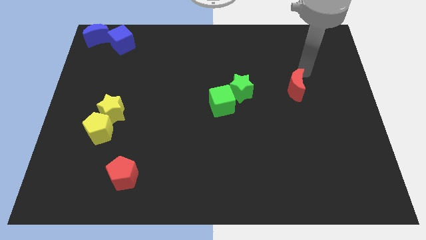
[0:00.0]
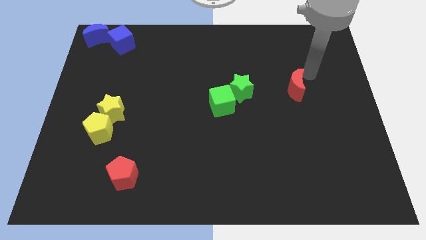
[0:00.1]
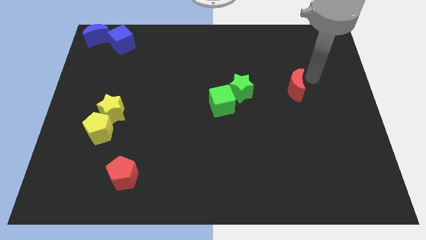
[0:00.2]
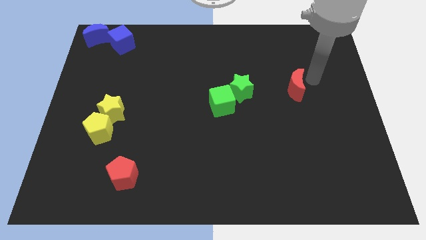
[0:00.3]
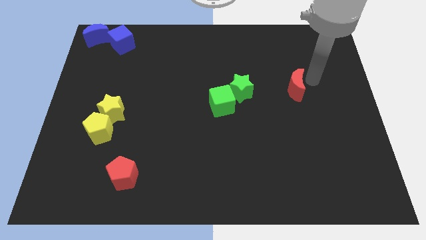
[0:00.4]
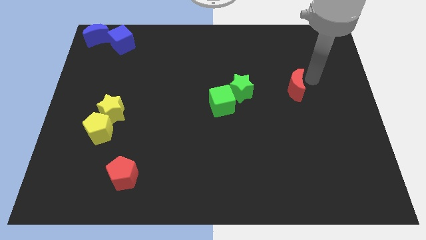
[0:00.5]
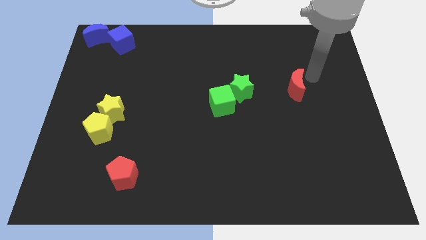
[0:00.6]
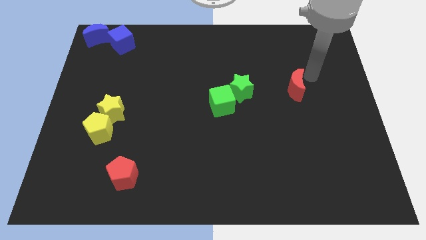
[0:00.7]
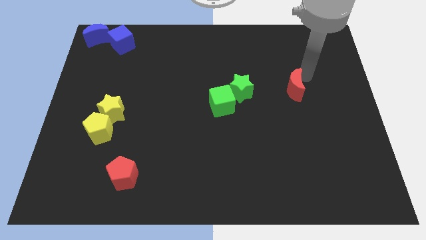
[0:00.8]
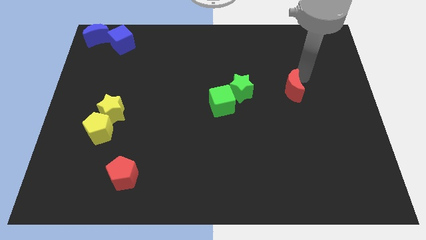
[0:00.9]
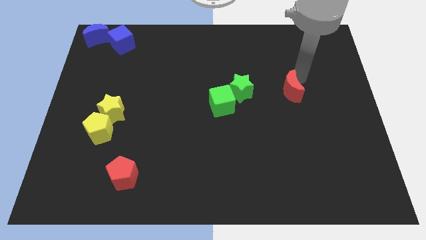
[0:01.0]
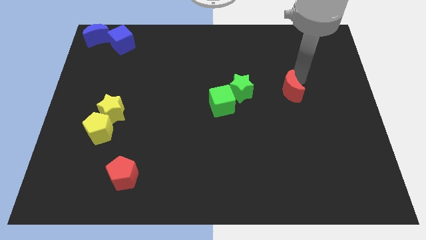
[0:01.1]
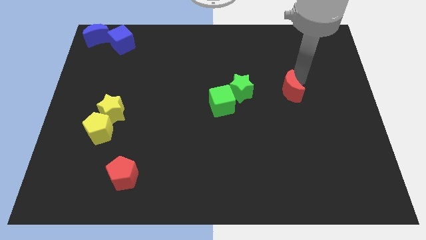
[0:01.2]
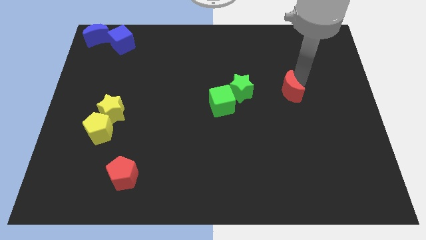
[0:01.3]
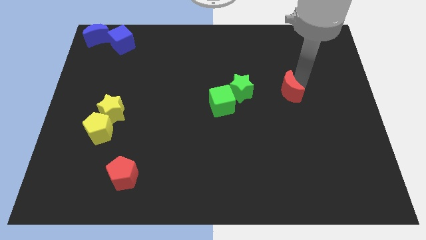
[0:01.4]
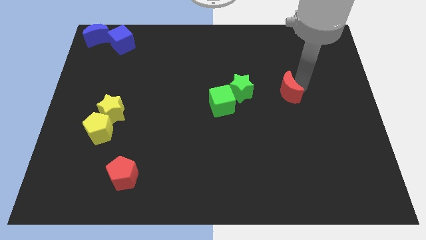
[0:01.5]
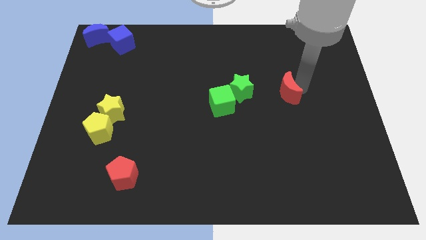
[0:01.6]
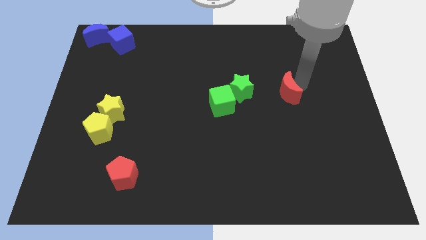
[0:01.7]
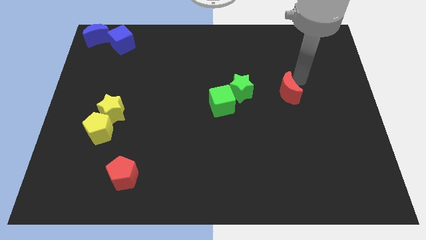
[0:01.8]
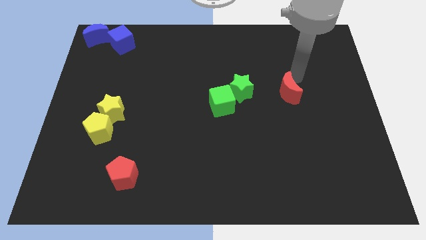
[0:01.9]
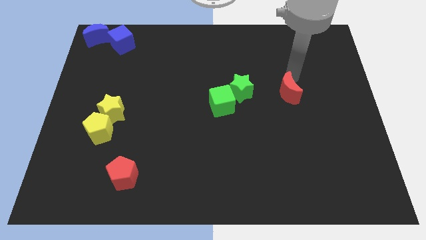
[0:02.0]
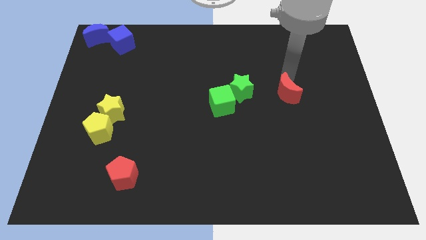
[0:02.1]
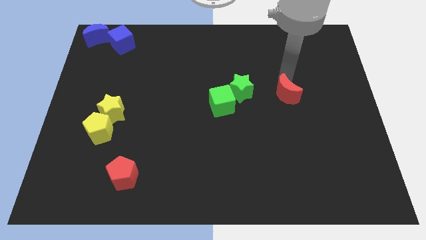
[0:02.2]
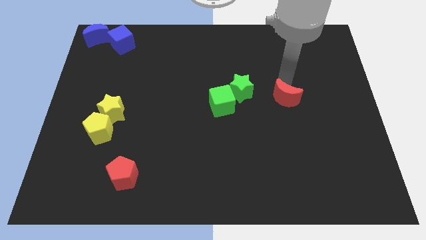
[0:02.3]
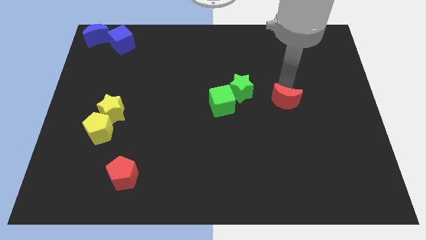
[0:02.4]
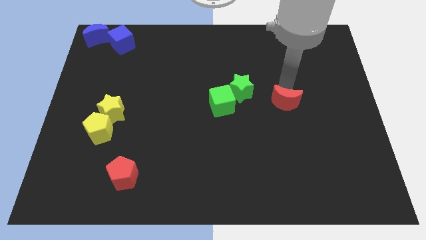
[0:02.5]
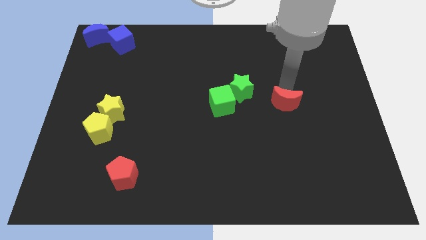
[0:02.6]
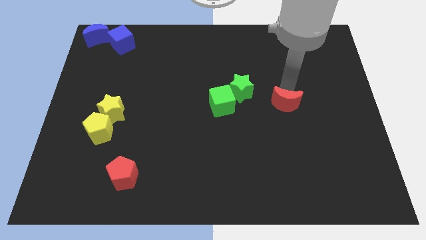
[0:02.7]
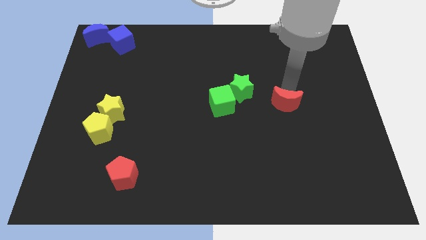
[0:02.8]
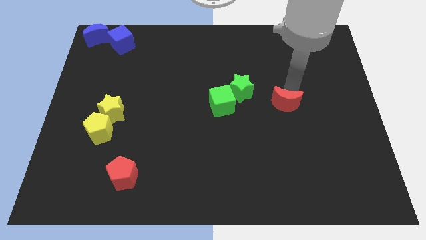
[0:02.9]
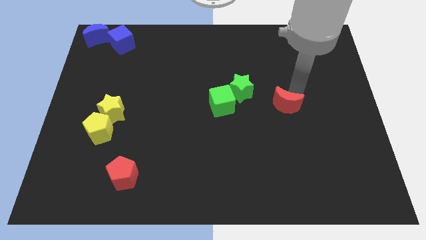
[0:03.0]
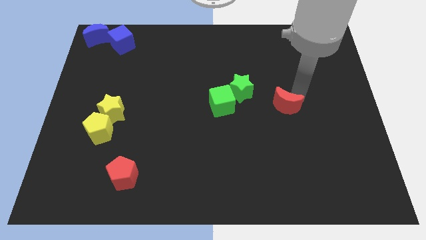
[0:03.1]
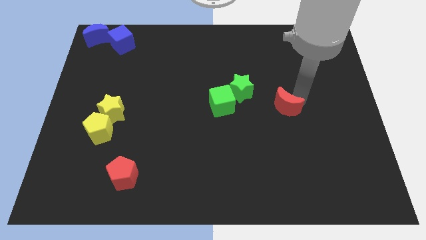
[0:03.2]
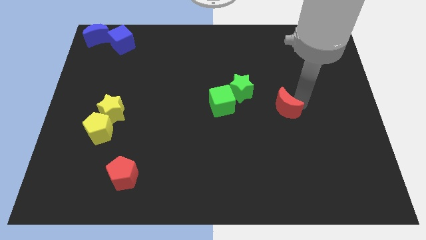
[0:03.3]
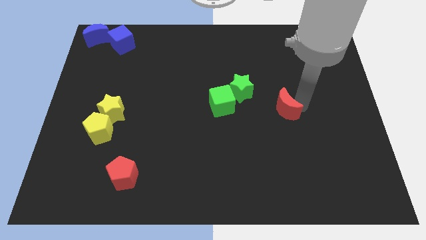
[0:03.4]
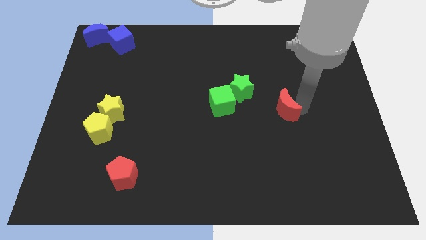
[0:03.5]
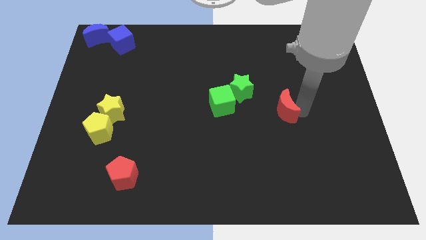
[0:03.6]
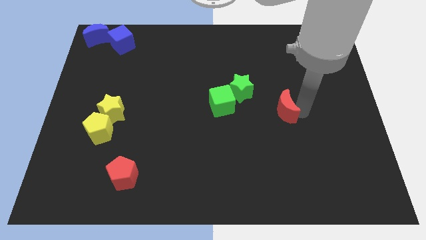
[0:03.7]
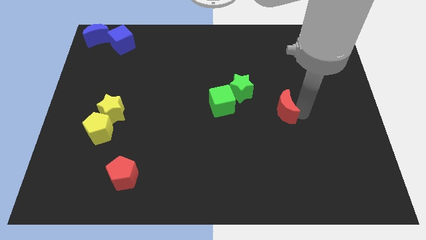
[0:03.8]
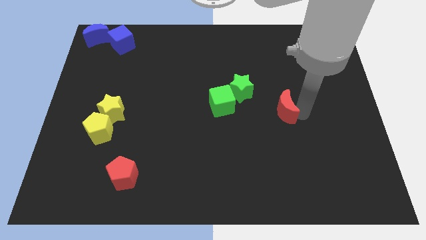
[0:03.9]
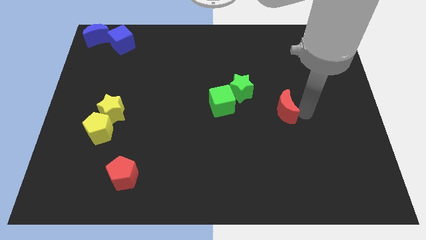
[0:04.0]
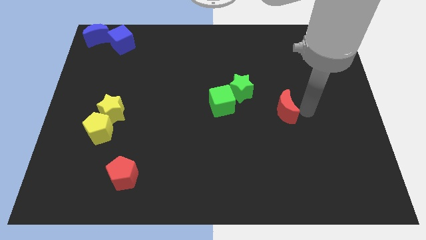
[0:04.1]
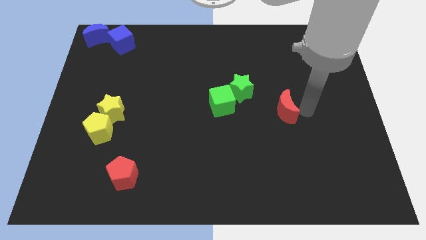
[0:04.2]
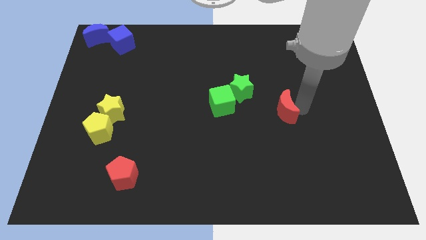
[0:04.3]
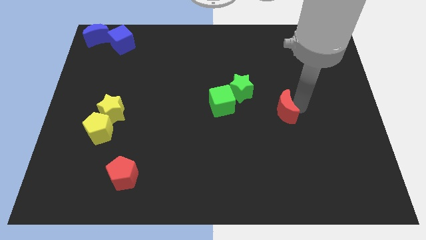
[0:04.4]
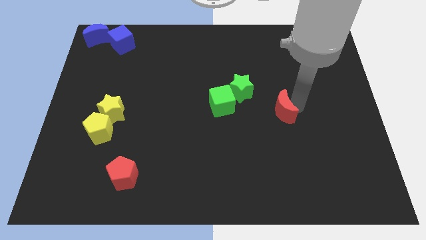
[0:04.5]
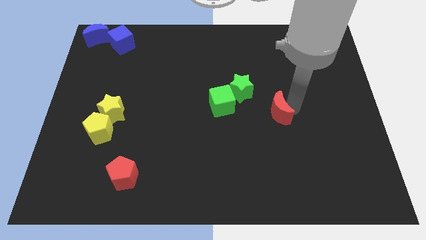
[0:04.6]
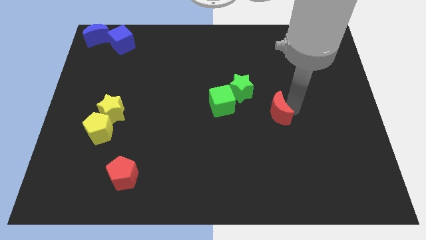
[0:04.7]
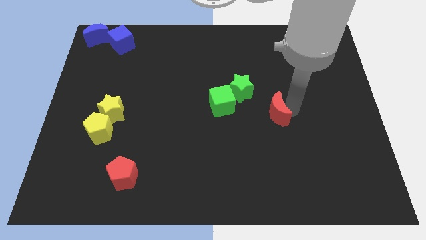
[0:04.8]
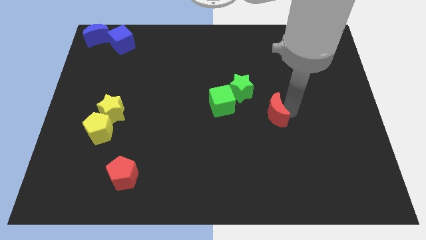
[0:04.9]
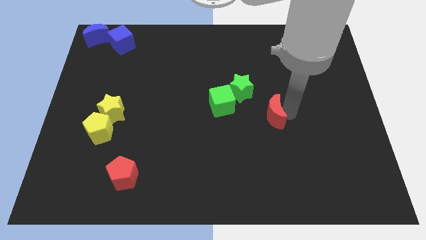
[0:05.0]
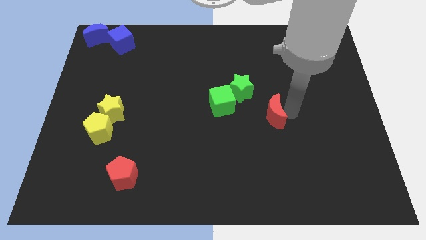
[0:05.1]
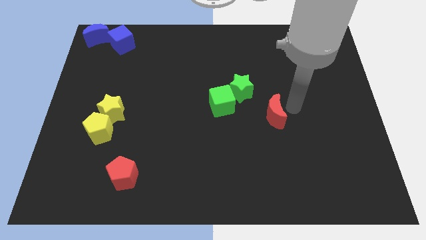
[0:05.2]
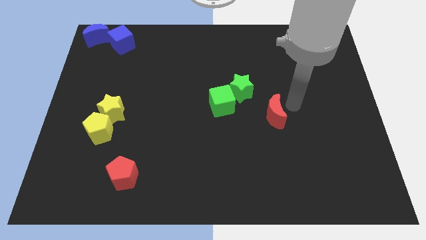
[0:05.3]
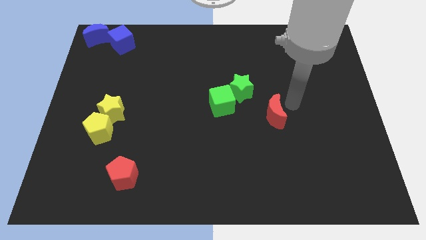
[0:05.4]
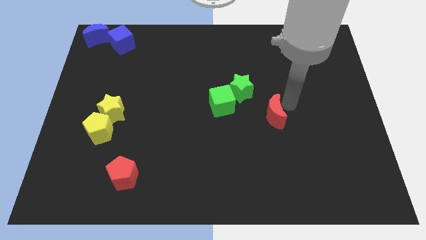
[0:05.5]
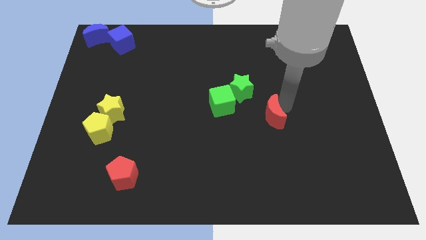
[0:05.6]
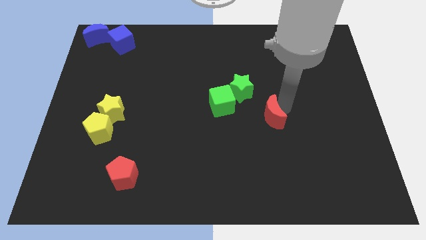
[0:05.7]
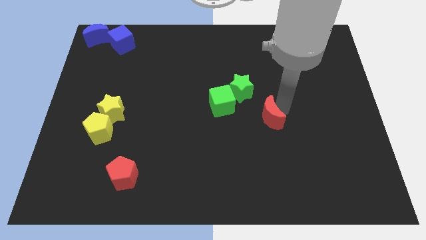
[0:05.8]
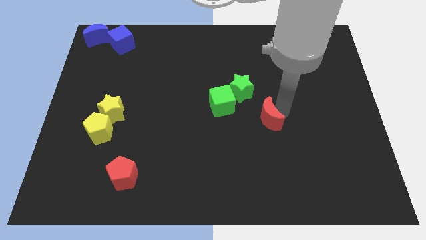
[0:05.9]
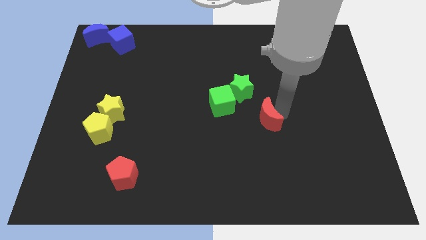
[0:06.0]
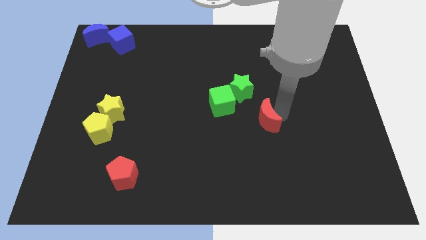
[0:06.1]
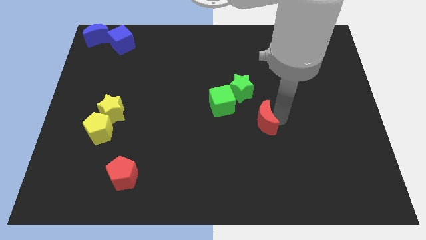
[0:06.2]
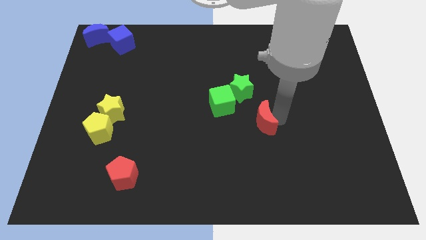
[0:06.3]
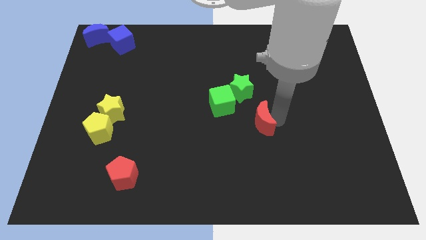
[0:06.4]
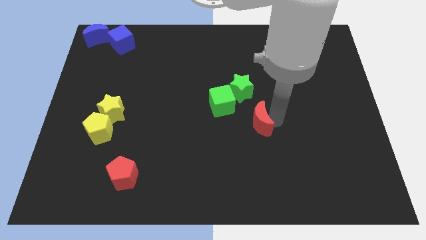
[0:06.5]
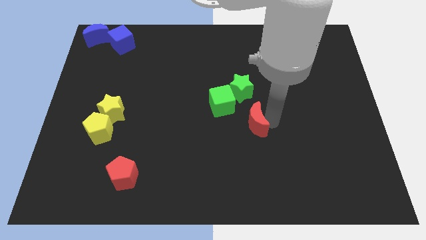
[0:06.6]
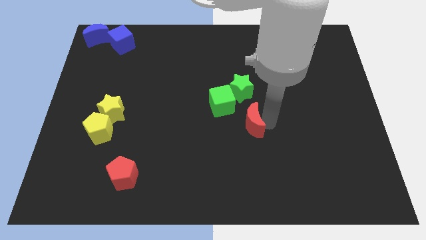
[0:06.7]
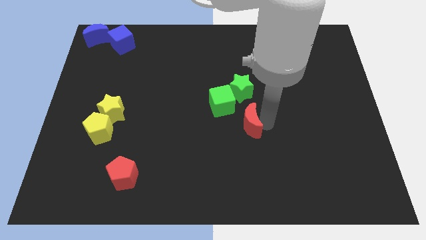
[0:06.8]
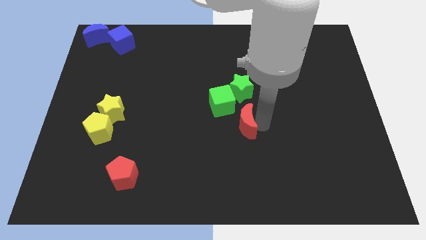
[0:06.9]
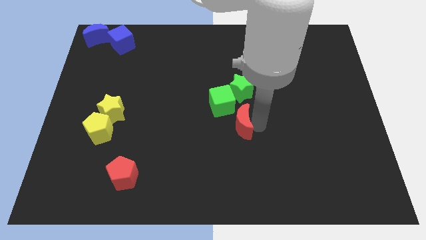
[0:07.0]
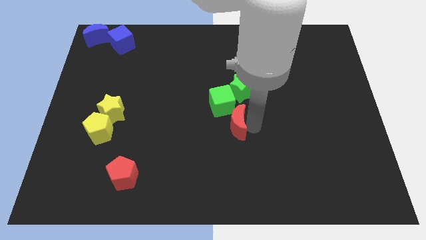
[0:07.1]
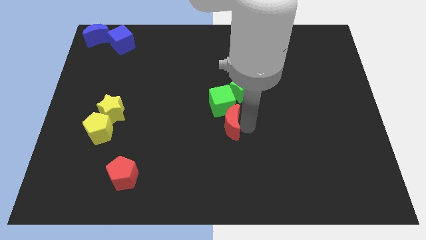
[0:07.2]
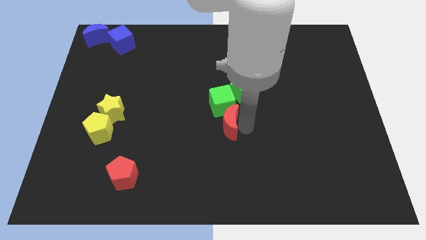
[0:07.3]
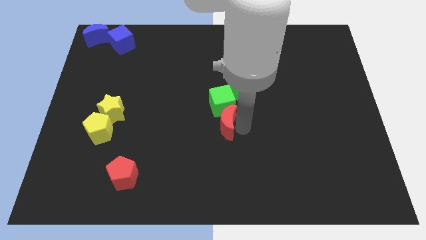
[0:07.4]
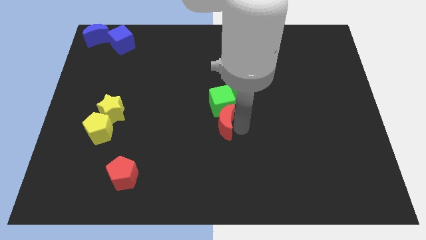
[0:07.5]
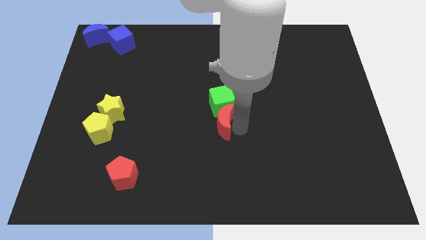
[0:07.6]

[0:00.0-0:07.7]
push the red moon below the green cube

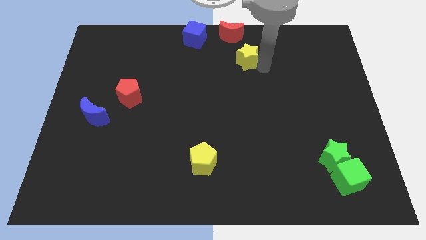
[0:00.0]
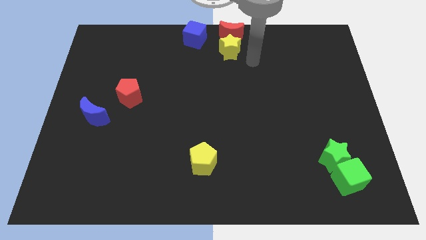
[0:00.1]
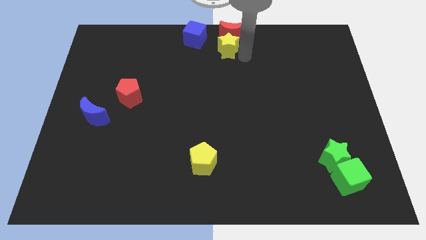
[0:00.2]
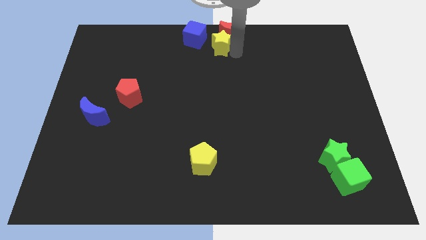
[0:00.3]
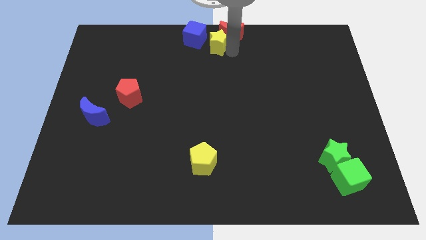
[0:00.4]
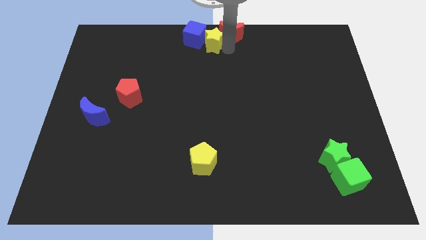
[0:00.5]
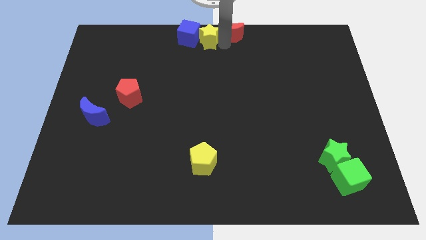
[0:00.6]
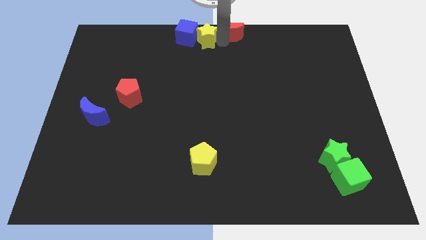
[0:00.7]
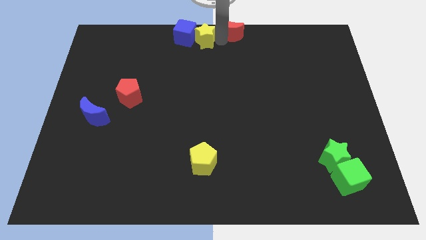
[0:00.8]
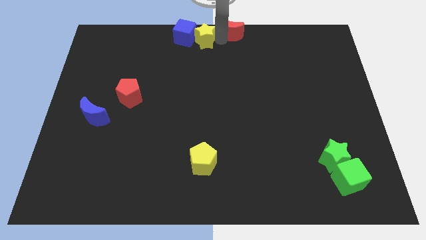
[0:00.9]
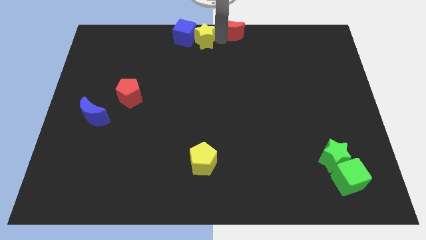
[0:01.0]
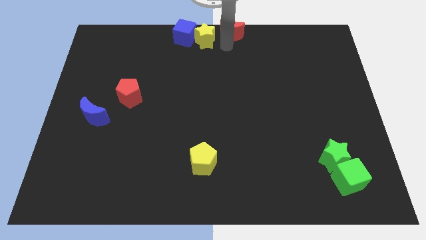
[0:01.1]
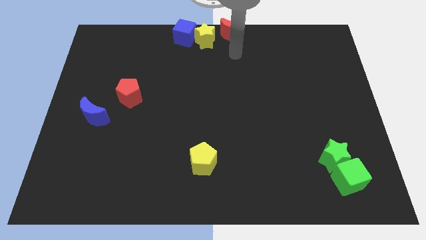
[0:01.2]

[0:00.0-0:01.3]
place yellow star between blue block and red crescent
